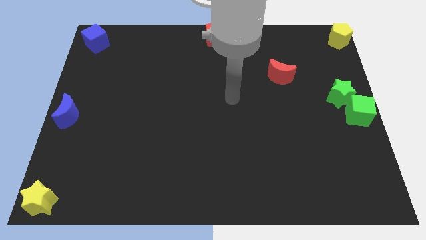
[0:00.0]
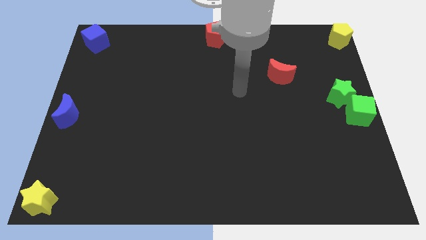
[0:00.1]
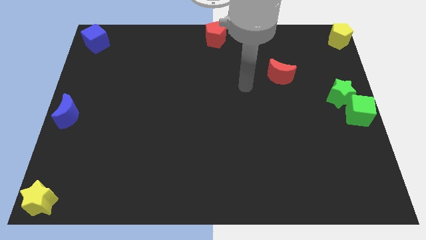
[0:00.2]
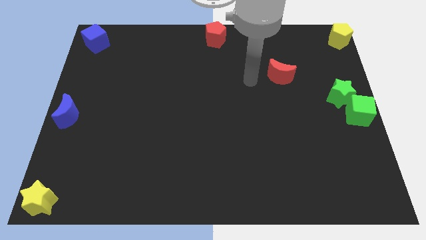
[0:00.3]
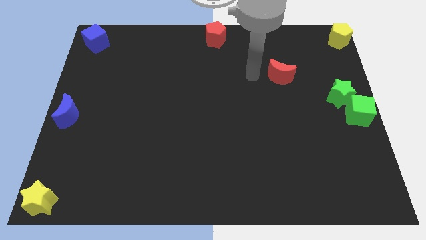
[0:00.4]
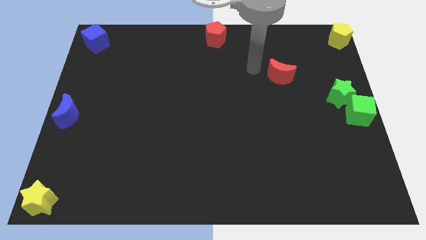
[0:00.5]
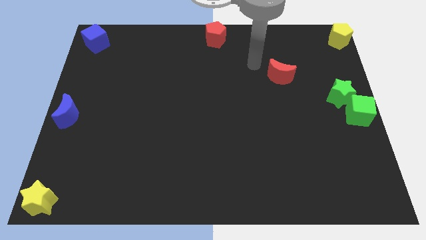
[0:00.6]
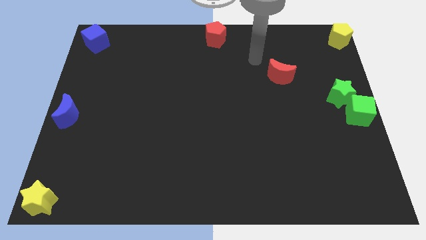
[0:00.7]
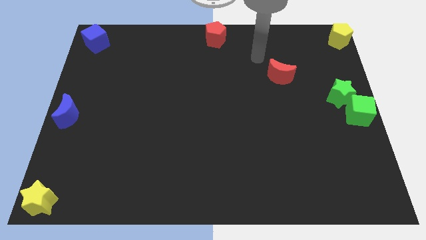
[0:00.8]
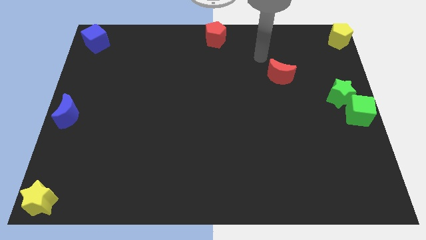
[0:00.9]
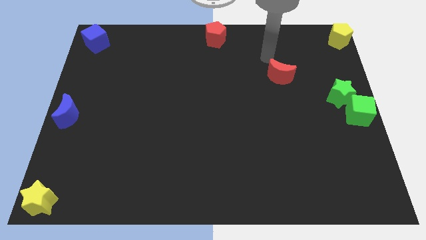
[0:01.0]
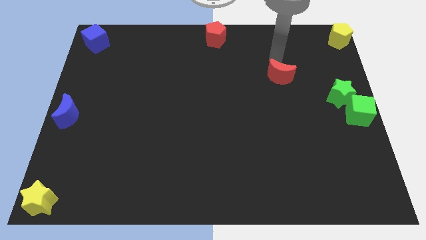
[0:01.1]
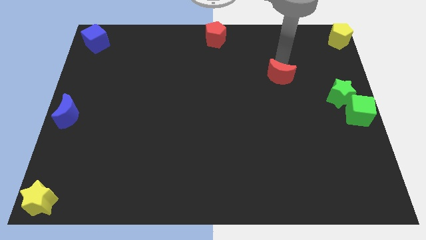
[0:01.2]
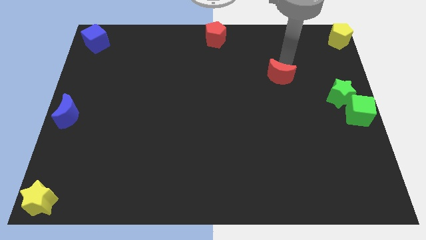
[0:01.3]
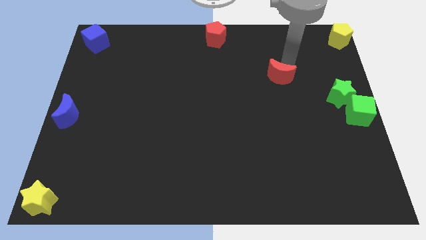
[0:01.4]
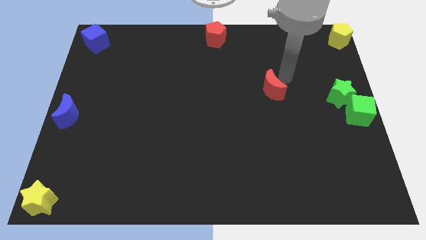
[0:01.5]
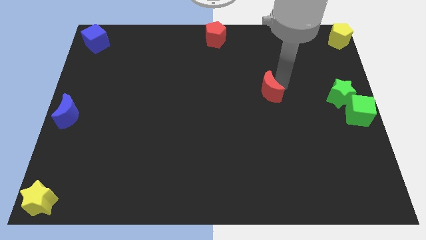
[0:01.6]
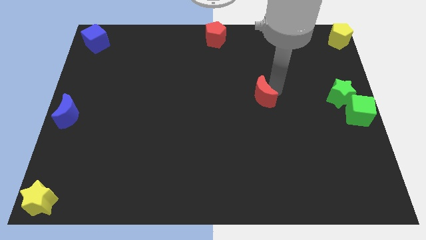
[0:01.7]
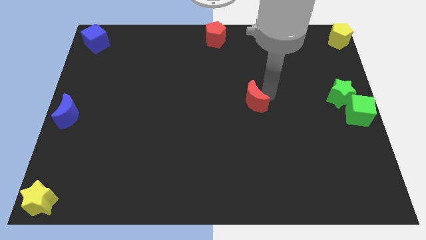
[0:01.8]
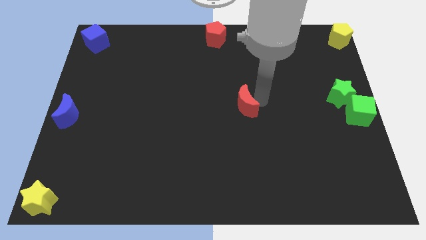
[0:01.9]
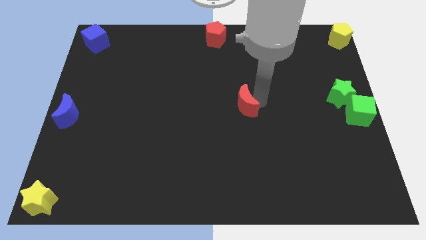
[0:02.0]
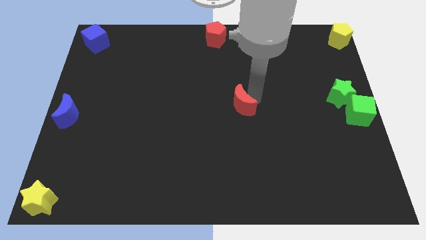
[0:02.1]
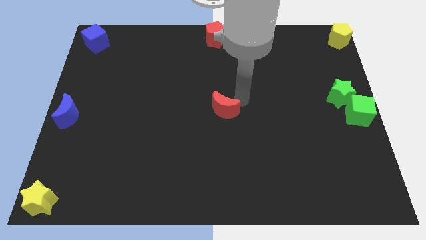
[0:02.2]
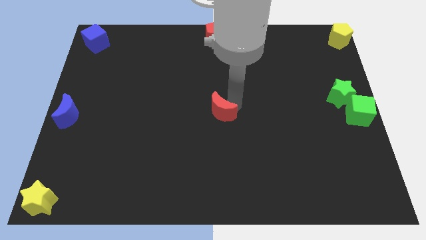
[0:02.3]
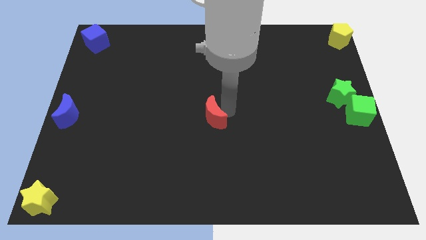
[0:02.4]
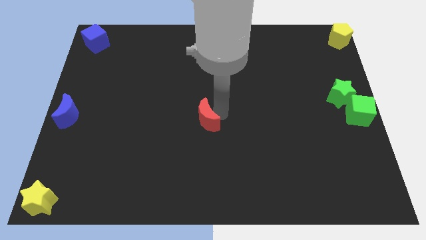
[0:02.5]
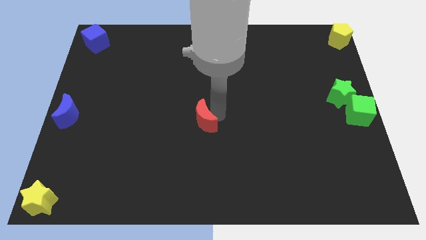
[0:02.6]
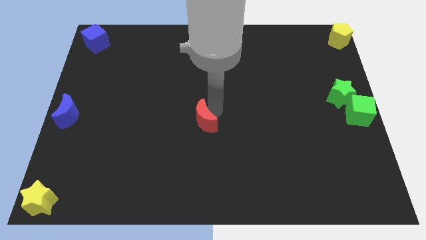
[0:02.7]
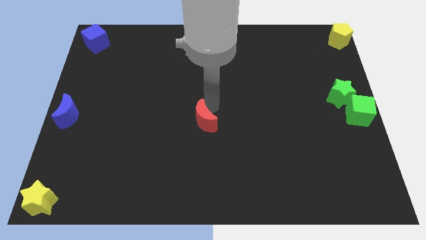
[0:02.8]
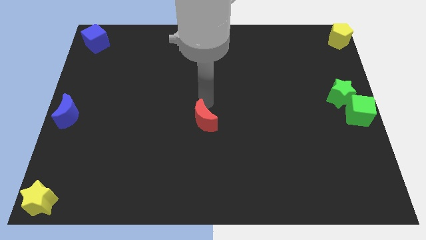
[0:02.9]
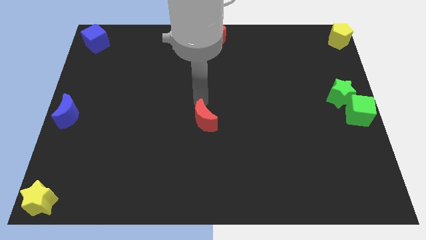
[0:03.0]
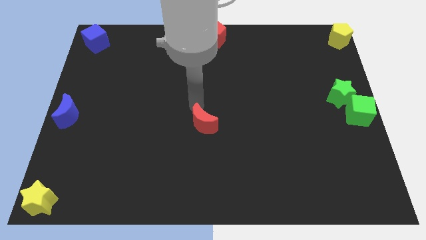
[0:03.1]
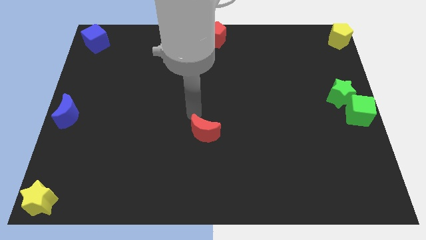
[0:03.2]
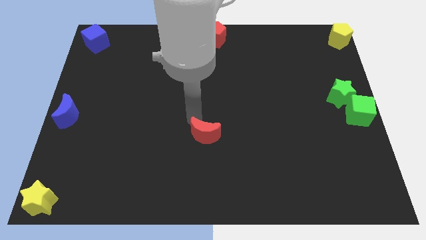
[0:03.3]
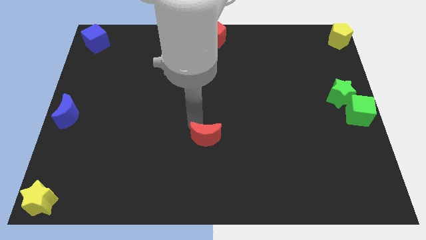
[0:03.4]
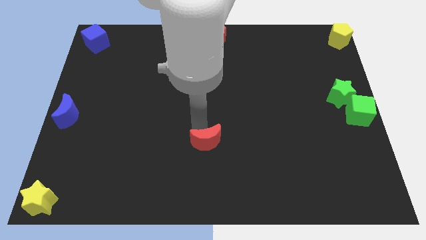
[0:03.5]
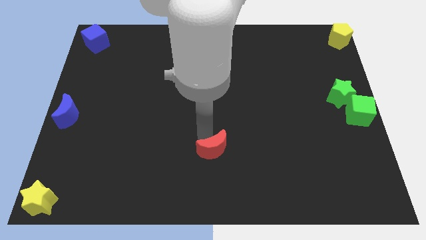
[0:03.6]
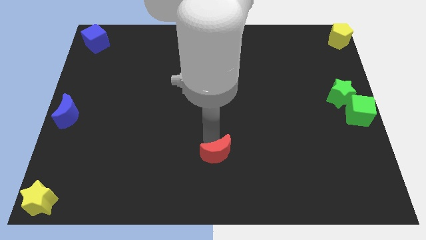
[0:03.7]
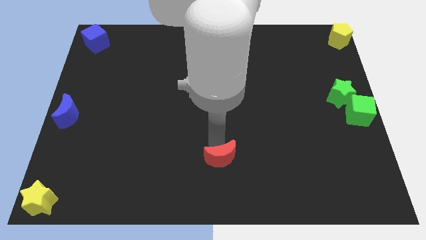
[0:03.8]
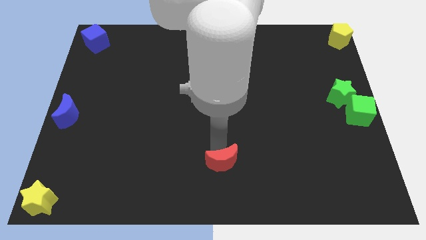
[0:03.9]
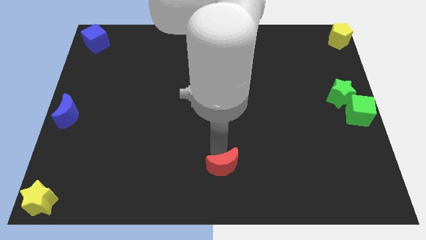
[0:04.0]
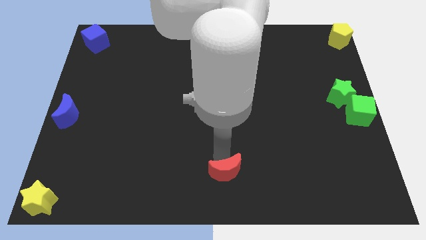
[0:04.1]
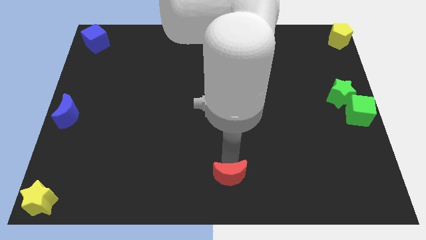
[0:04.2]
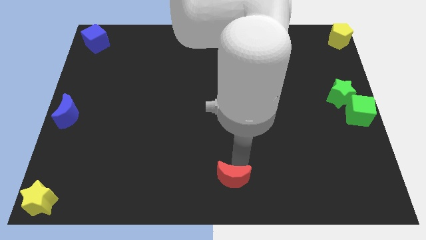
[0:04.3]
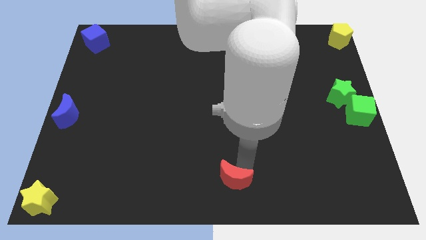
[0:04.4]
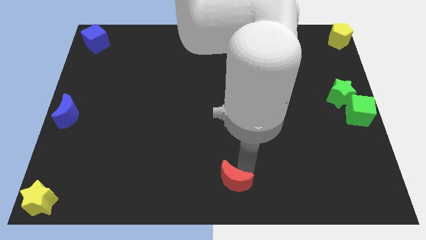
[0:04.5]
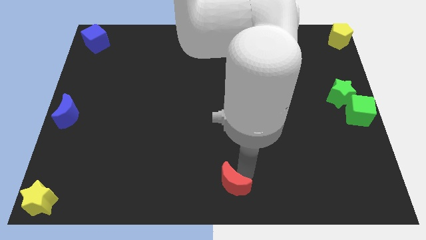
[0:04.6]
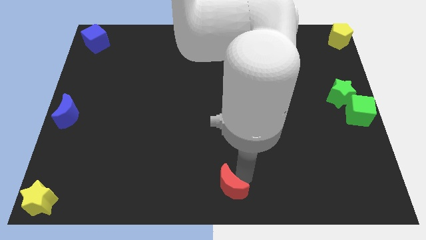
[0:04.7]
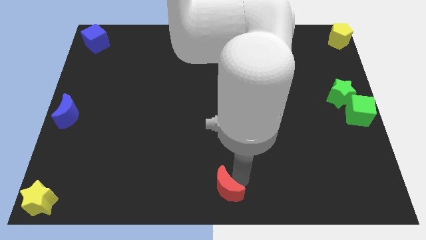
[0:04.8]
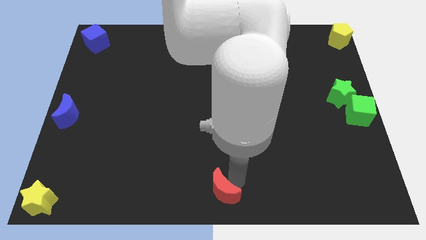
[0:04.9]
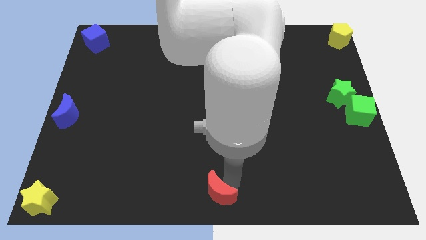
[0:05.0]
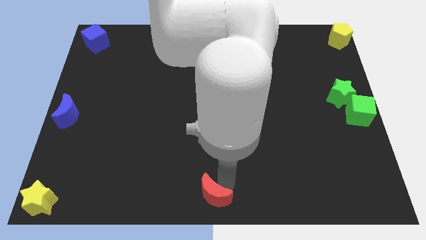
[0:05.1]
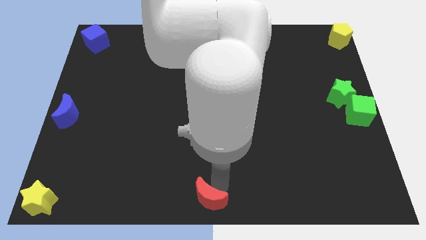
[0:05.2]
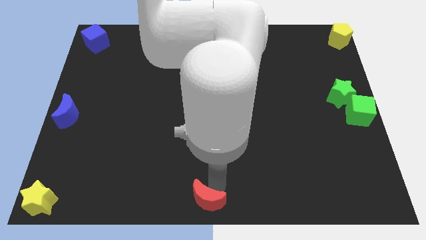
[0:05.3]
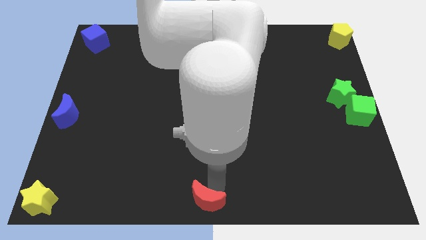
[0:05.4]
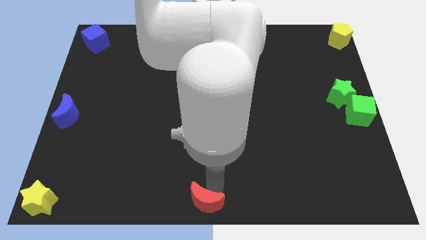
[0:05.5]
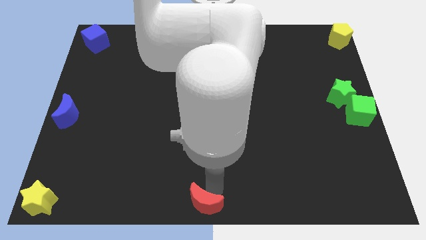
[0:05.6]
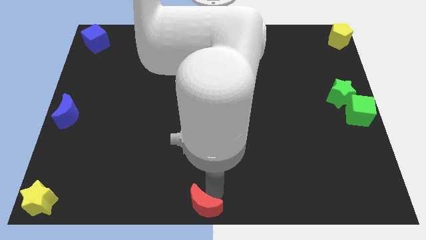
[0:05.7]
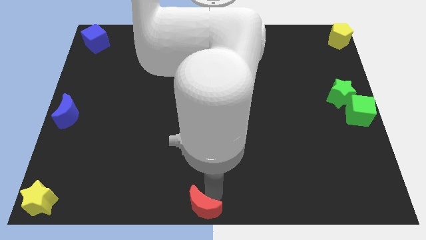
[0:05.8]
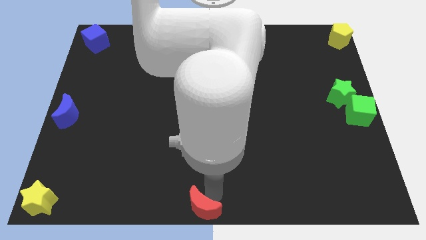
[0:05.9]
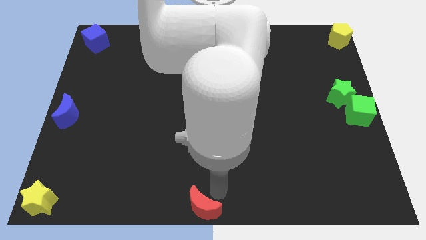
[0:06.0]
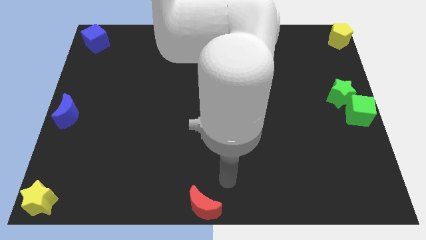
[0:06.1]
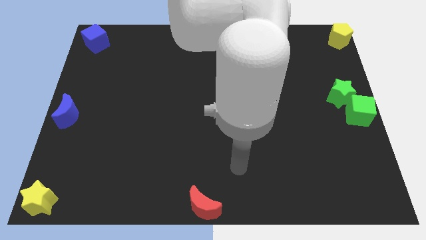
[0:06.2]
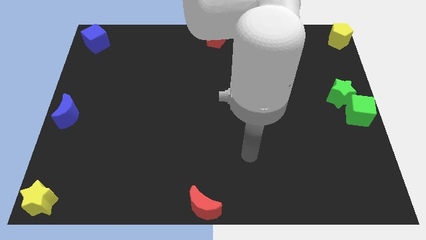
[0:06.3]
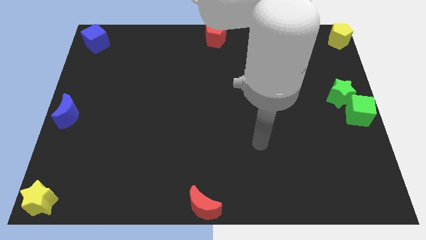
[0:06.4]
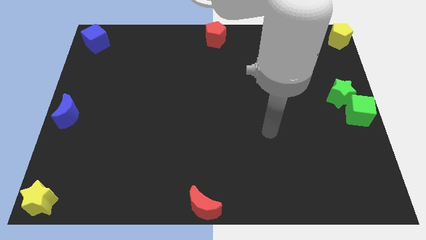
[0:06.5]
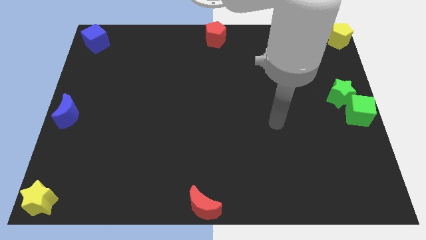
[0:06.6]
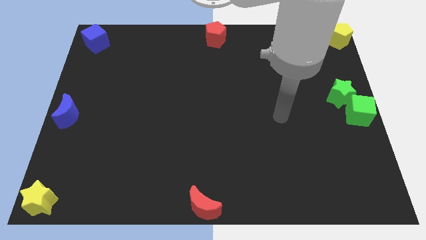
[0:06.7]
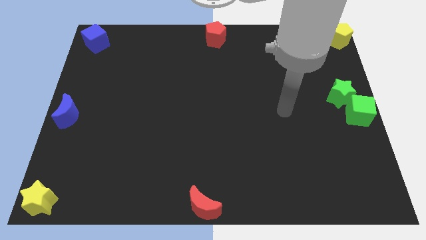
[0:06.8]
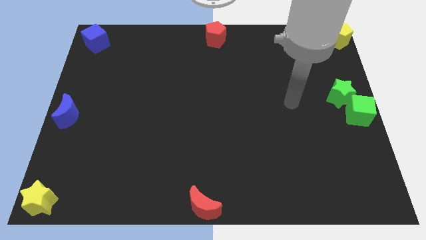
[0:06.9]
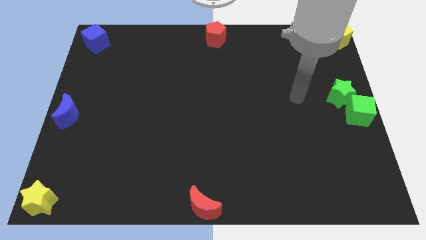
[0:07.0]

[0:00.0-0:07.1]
move red moon to the bottom center of the board

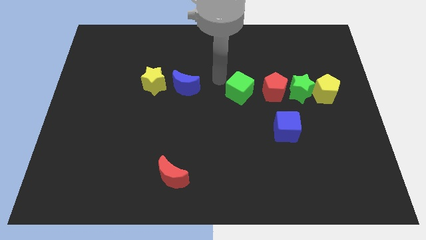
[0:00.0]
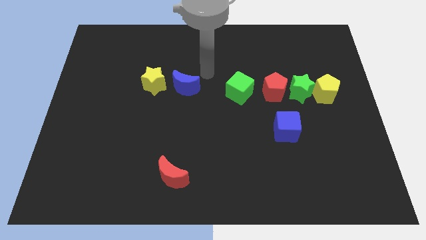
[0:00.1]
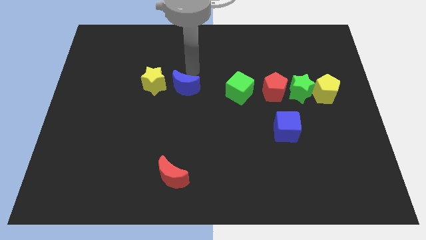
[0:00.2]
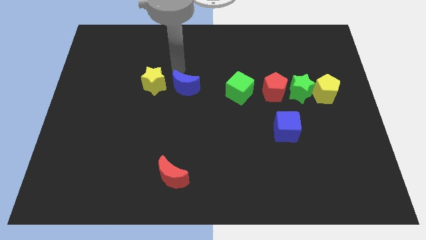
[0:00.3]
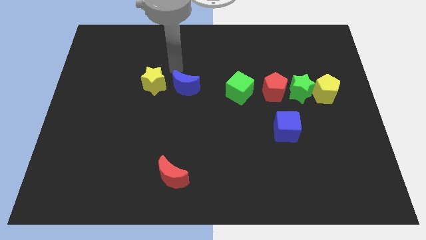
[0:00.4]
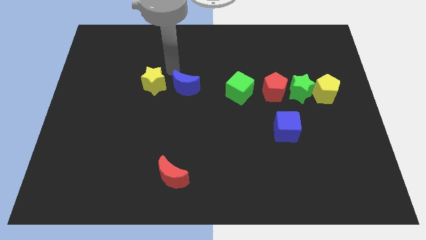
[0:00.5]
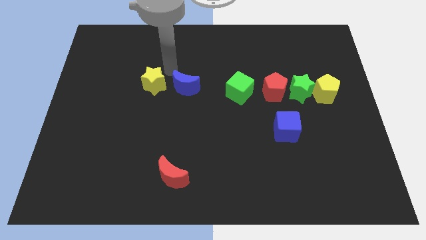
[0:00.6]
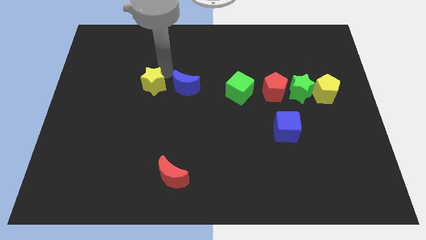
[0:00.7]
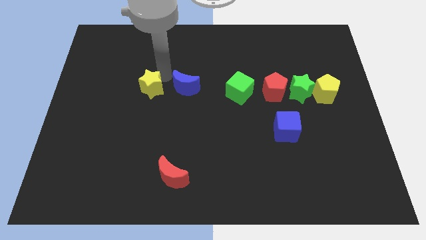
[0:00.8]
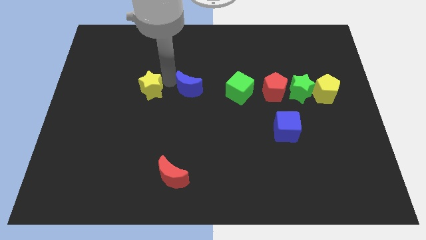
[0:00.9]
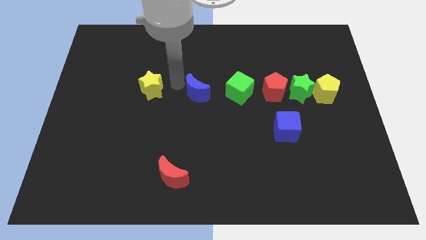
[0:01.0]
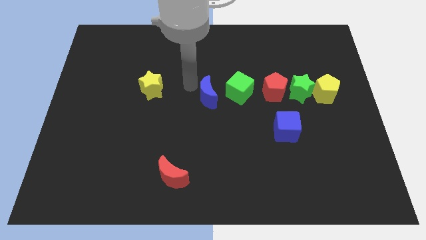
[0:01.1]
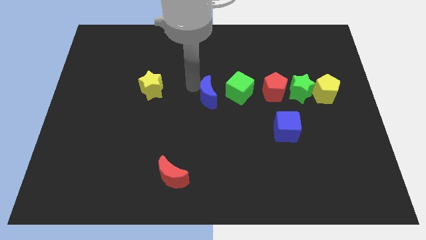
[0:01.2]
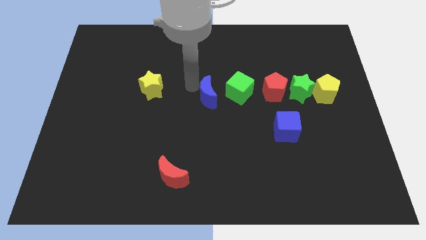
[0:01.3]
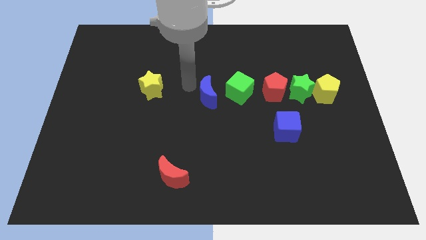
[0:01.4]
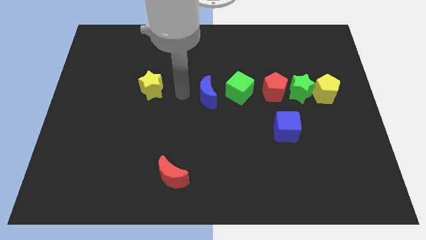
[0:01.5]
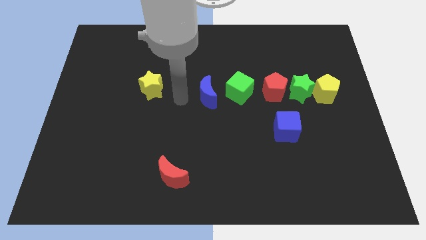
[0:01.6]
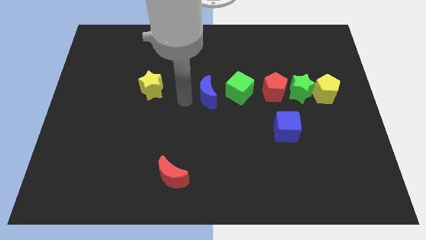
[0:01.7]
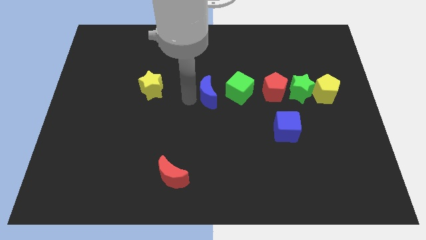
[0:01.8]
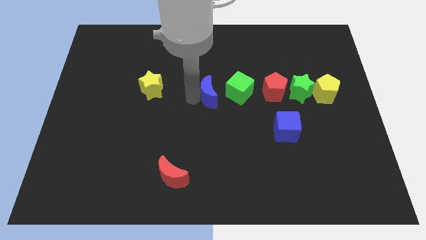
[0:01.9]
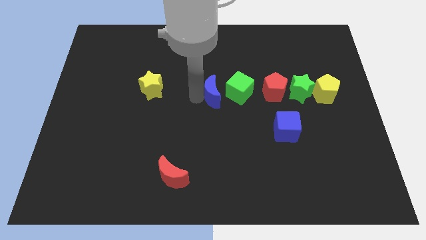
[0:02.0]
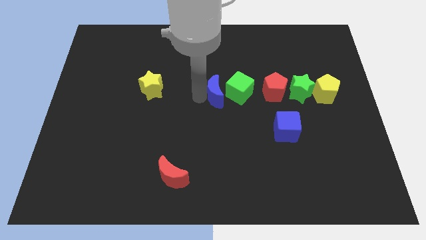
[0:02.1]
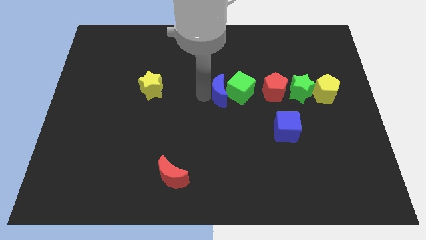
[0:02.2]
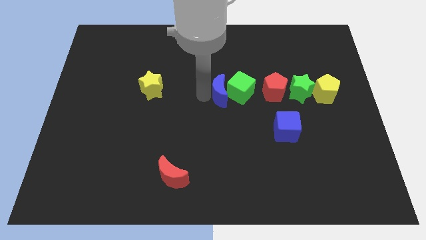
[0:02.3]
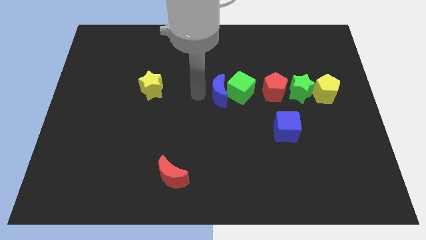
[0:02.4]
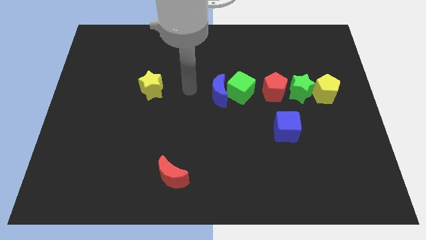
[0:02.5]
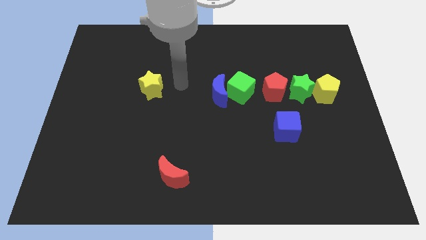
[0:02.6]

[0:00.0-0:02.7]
push the blue crescent into the green cube
